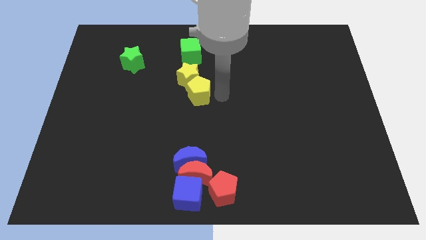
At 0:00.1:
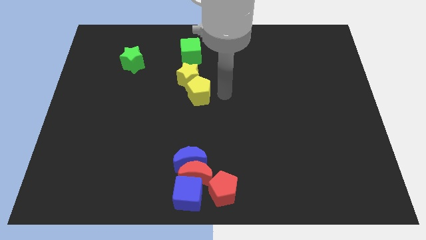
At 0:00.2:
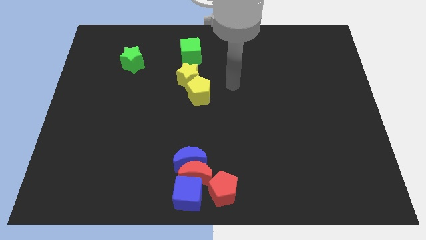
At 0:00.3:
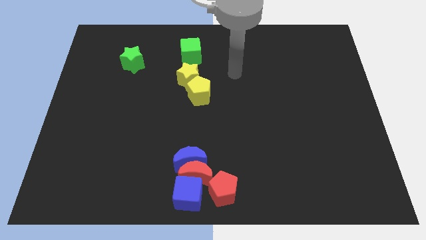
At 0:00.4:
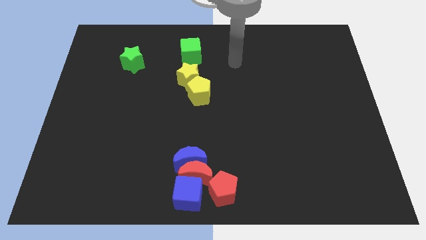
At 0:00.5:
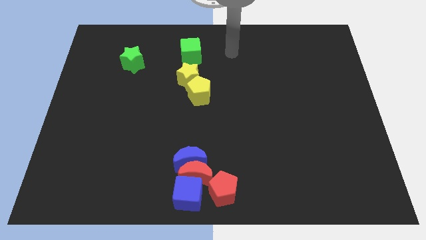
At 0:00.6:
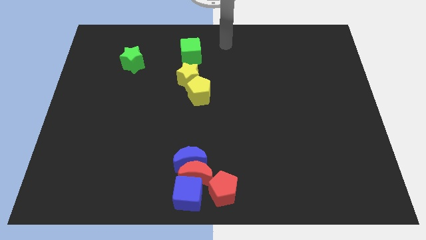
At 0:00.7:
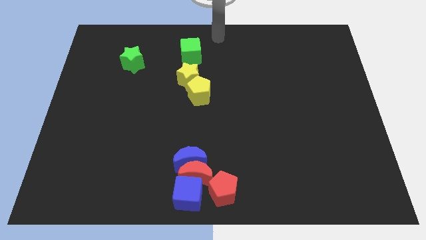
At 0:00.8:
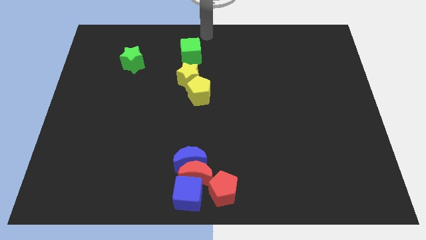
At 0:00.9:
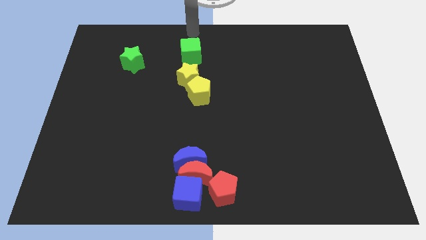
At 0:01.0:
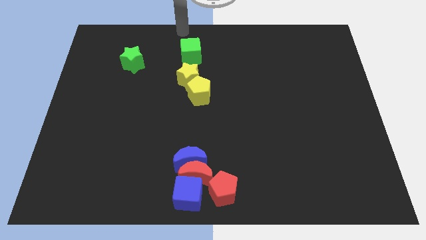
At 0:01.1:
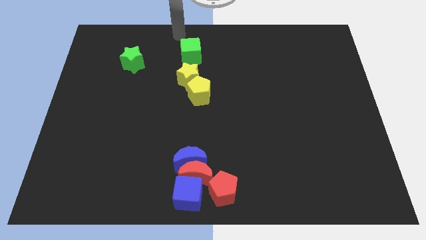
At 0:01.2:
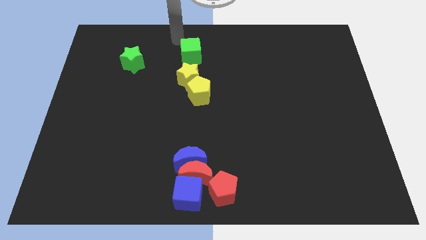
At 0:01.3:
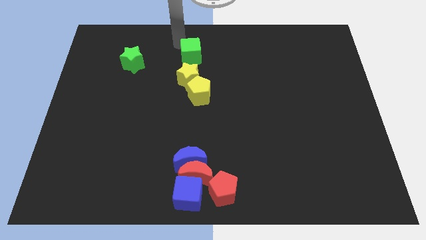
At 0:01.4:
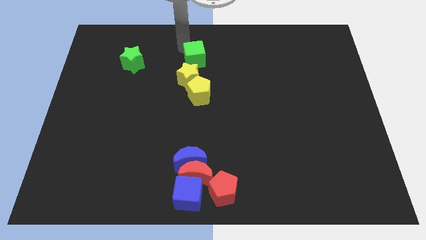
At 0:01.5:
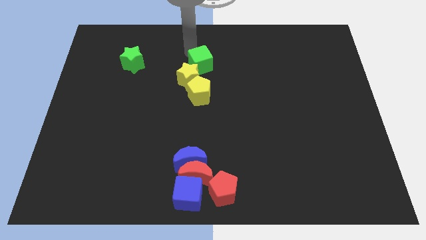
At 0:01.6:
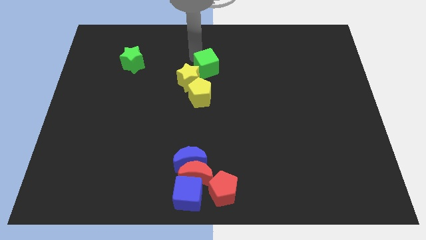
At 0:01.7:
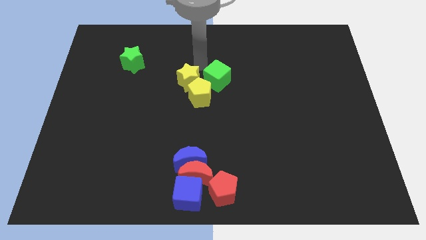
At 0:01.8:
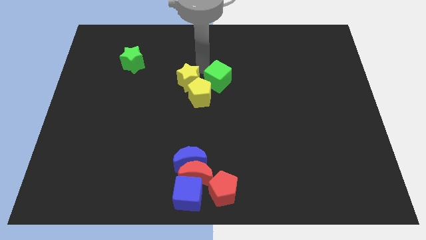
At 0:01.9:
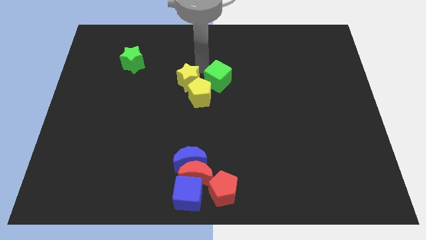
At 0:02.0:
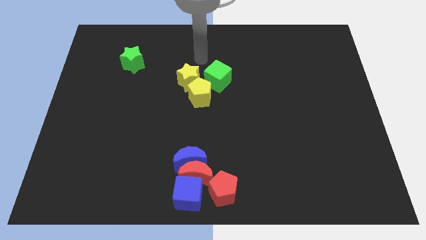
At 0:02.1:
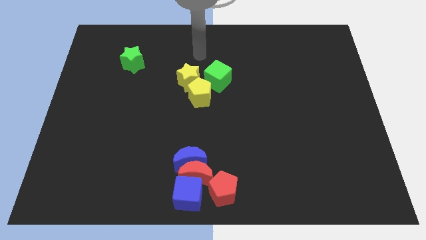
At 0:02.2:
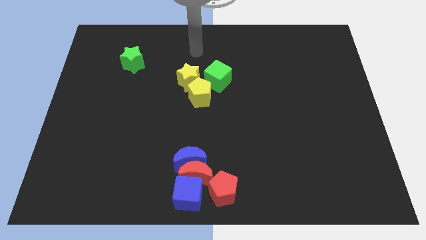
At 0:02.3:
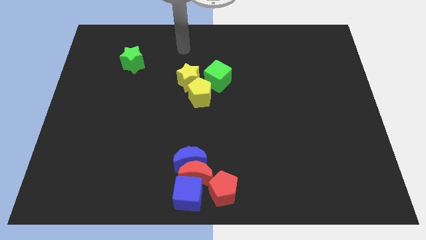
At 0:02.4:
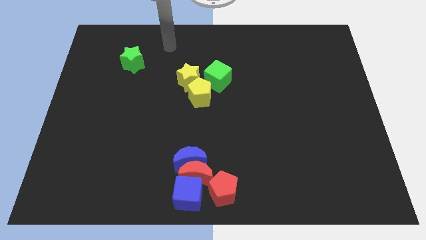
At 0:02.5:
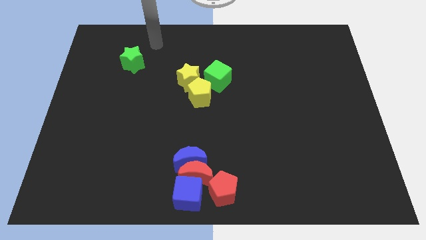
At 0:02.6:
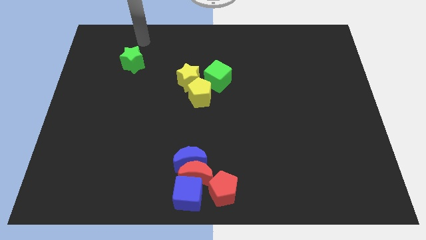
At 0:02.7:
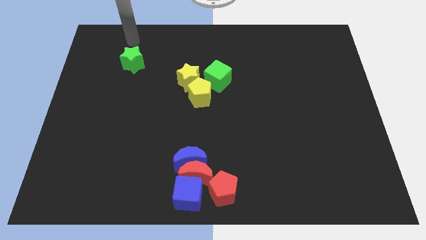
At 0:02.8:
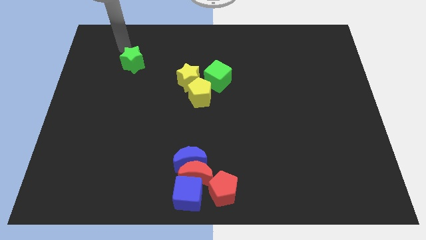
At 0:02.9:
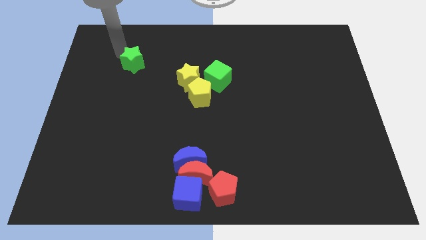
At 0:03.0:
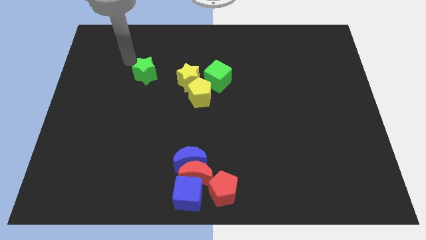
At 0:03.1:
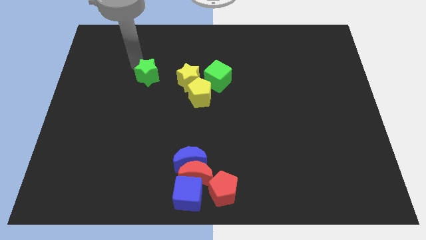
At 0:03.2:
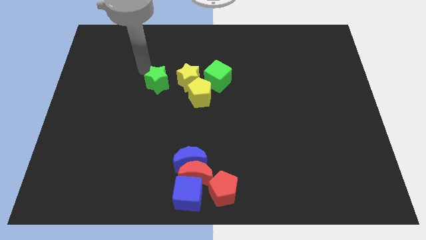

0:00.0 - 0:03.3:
push the green cube towards center of the board

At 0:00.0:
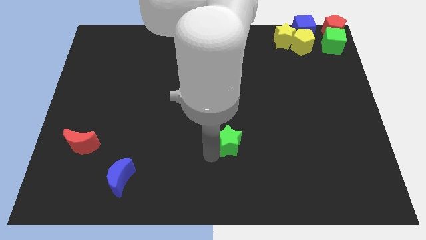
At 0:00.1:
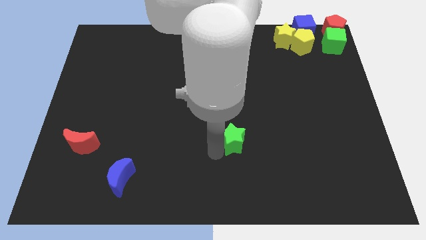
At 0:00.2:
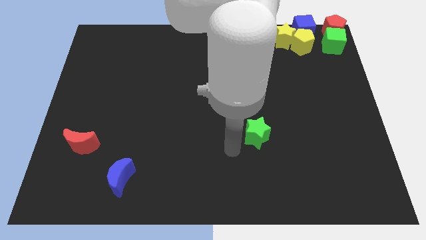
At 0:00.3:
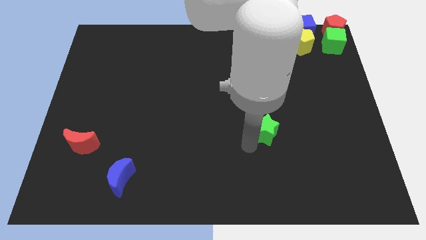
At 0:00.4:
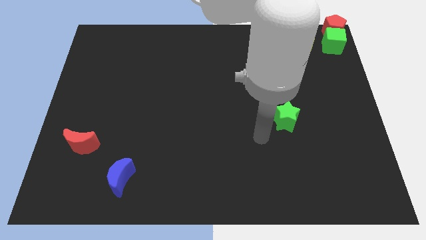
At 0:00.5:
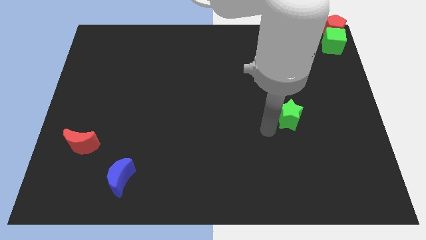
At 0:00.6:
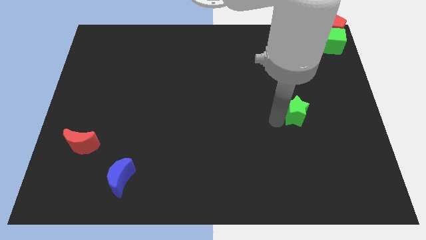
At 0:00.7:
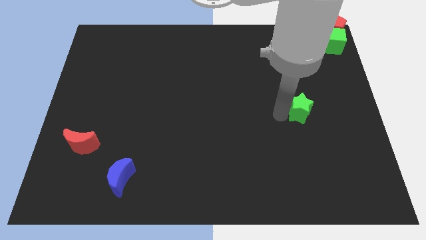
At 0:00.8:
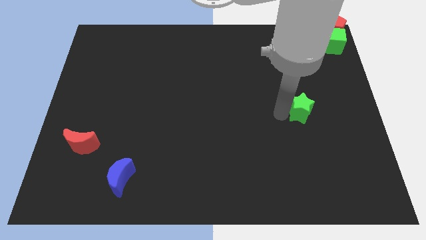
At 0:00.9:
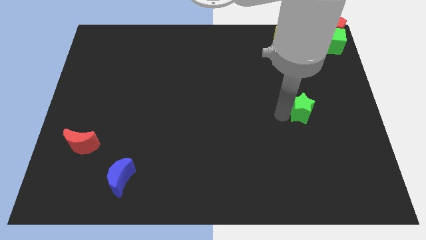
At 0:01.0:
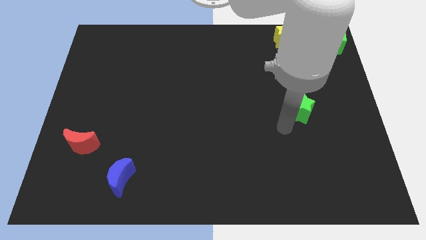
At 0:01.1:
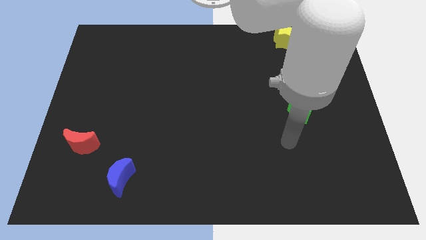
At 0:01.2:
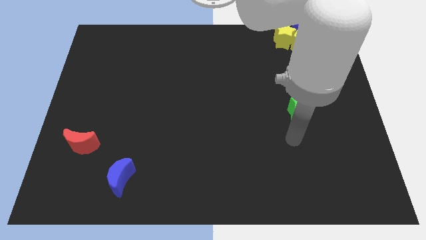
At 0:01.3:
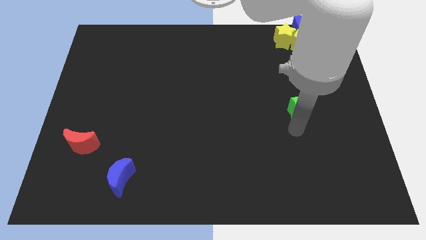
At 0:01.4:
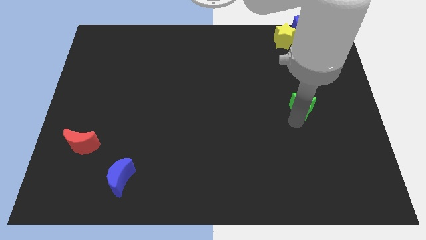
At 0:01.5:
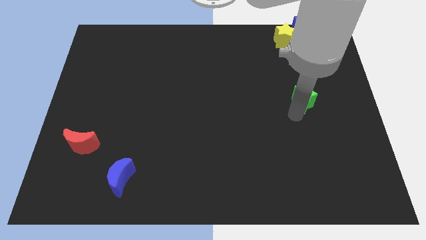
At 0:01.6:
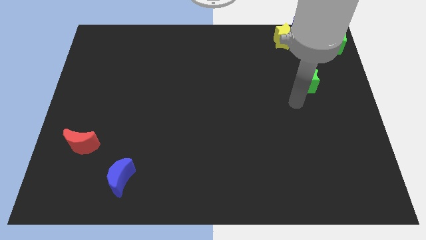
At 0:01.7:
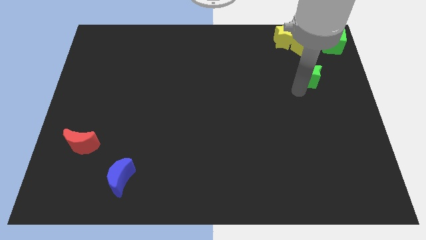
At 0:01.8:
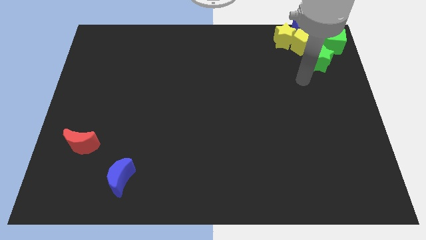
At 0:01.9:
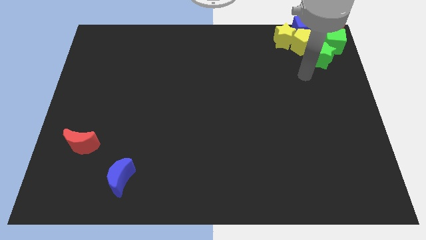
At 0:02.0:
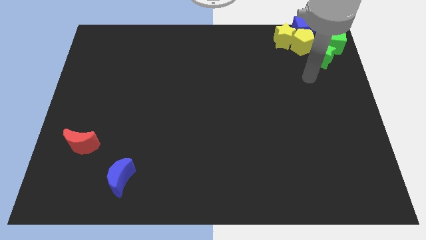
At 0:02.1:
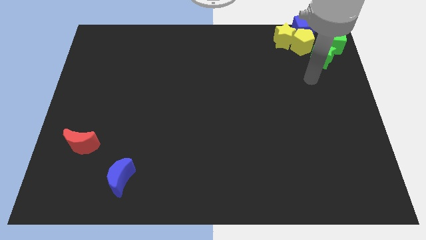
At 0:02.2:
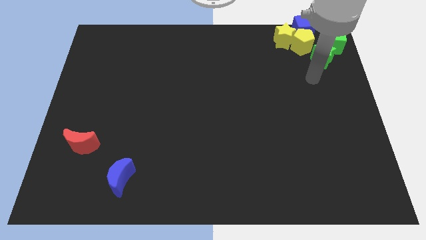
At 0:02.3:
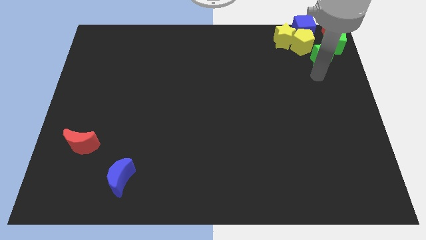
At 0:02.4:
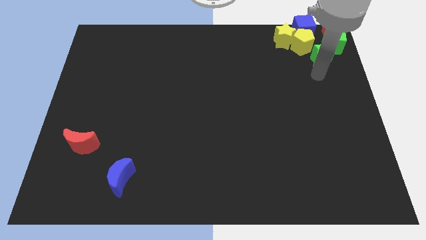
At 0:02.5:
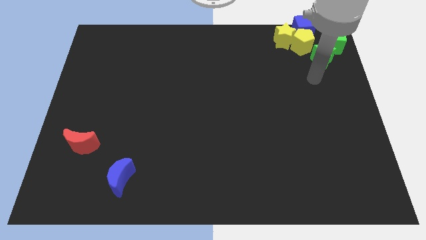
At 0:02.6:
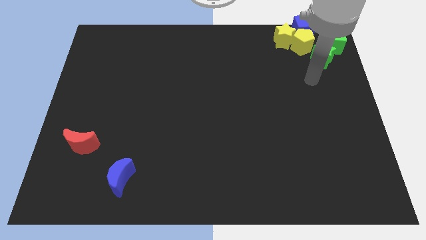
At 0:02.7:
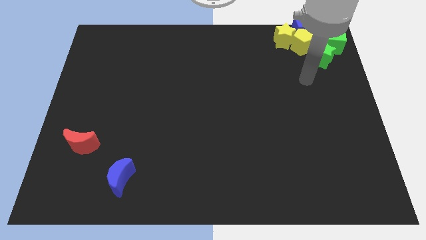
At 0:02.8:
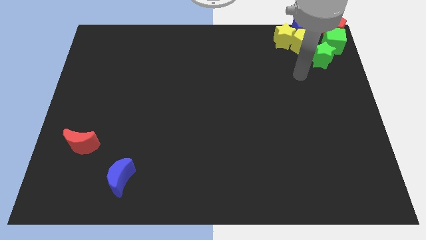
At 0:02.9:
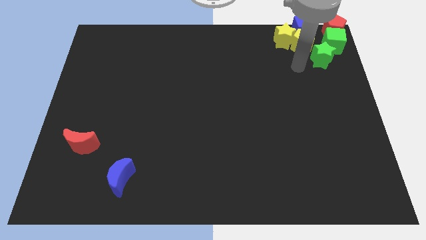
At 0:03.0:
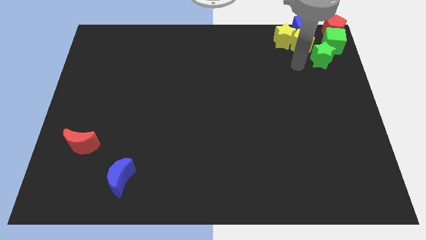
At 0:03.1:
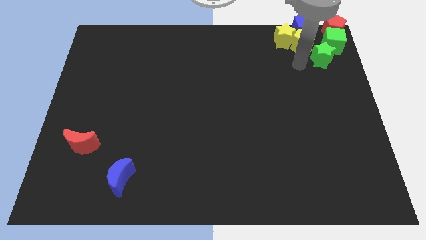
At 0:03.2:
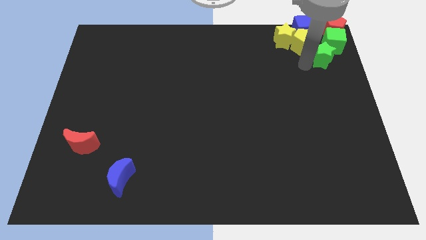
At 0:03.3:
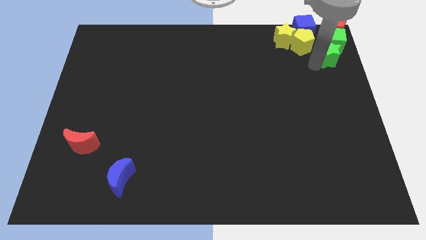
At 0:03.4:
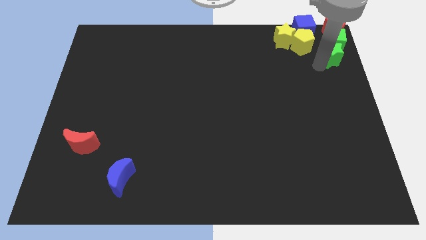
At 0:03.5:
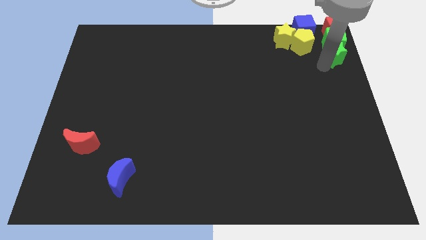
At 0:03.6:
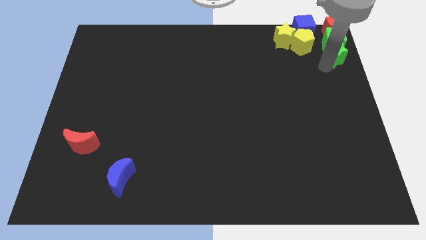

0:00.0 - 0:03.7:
push the green star to the bottom of the green cube to the top right of the board

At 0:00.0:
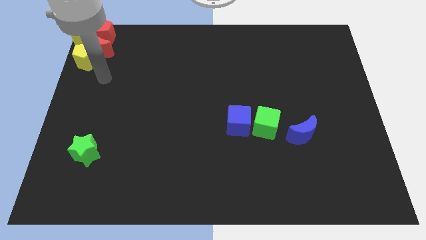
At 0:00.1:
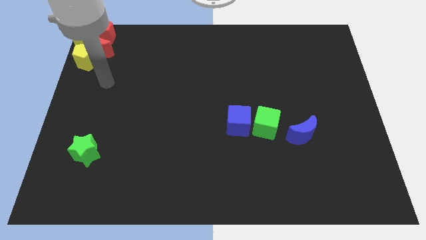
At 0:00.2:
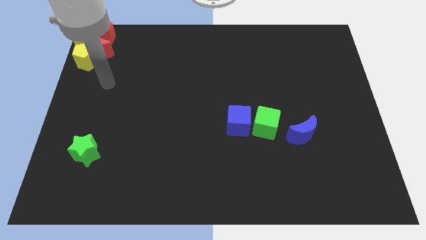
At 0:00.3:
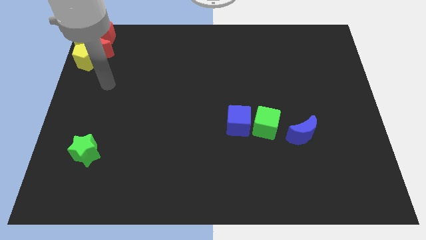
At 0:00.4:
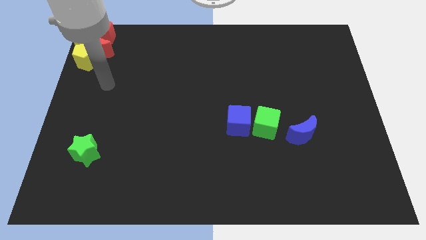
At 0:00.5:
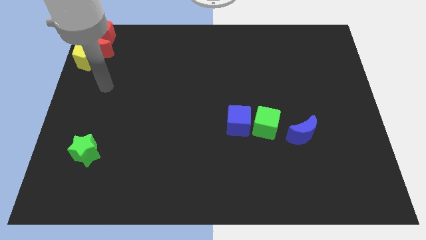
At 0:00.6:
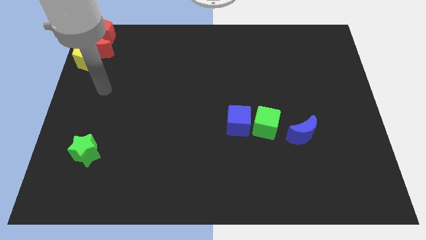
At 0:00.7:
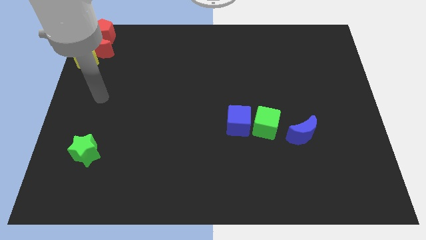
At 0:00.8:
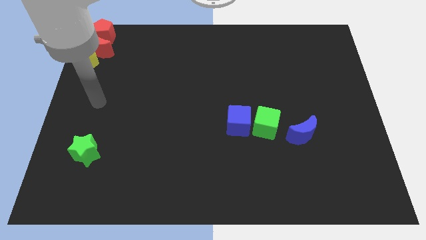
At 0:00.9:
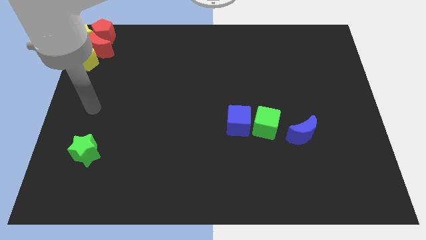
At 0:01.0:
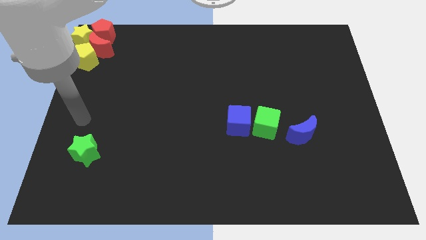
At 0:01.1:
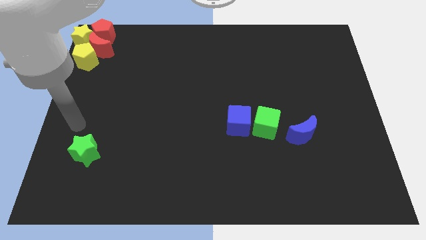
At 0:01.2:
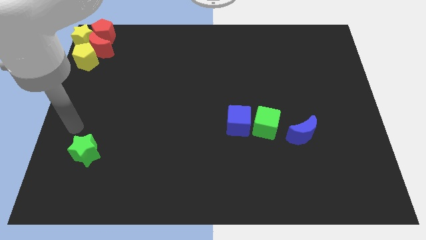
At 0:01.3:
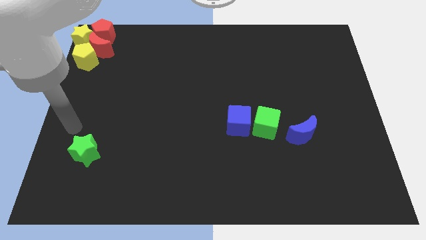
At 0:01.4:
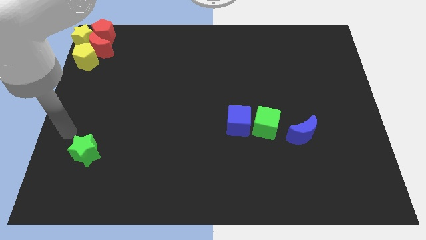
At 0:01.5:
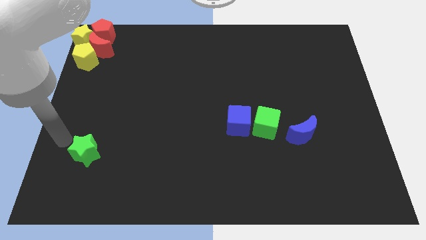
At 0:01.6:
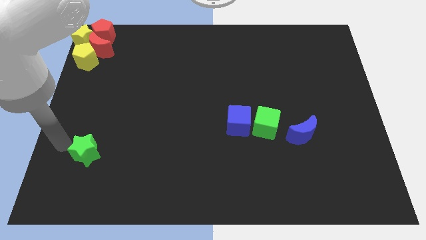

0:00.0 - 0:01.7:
move your arm away from the group of blocks

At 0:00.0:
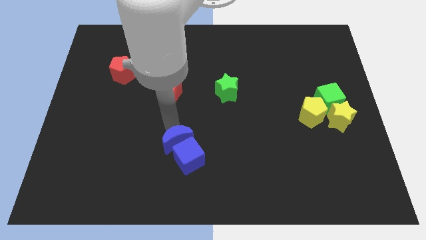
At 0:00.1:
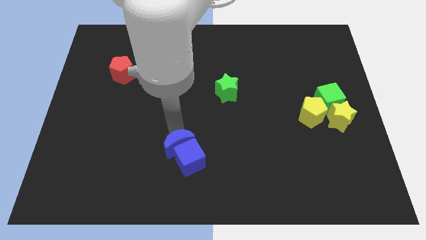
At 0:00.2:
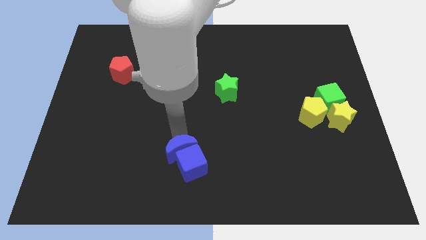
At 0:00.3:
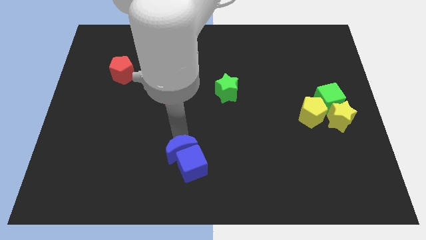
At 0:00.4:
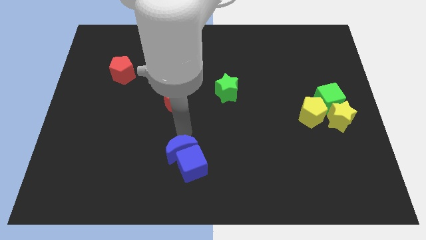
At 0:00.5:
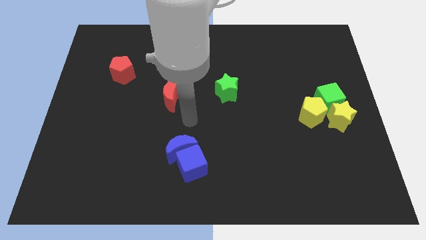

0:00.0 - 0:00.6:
push the blue blocks towards the bottom center of the board
